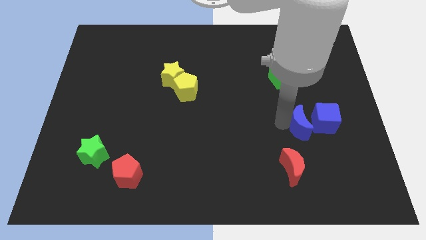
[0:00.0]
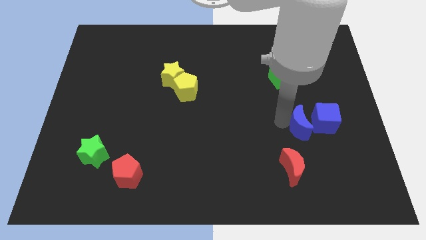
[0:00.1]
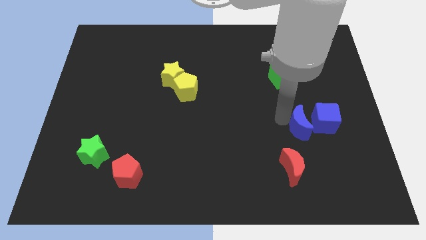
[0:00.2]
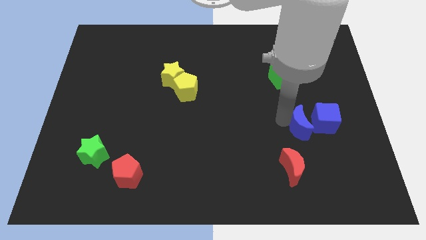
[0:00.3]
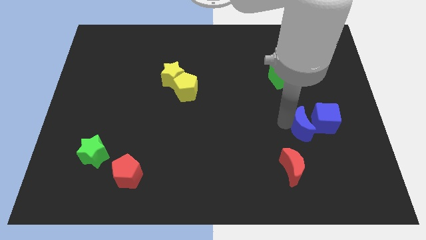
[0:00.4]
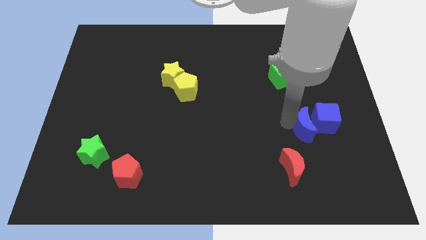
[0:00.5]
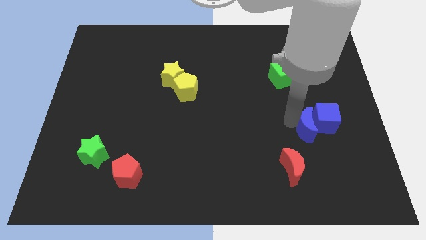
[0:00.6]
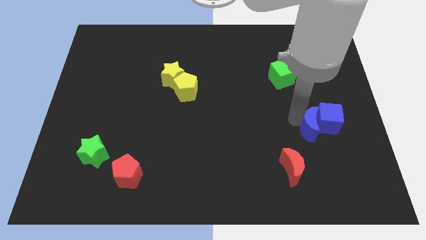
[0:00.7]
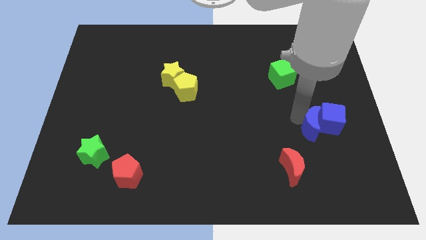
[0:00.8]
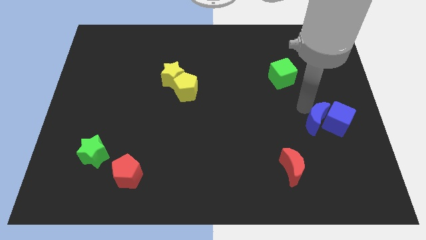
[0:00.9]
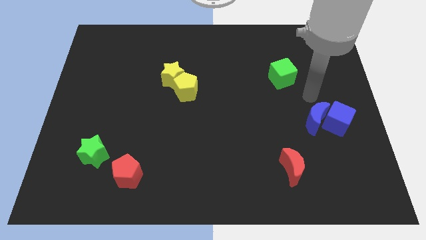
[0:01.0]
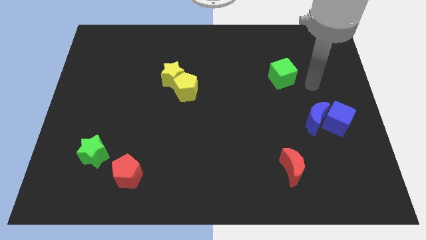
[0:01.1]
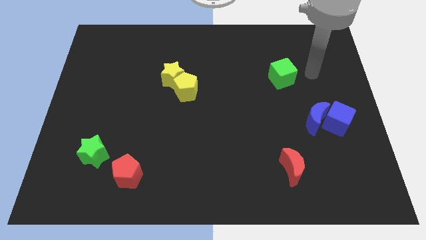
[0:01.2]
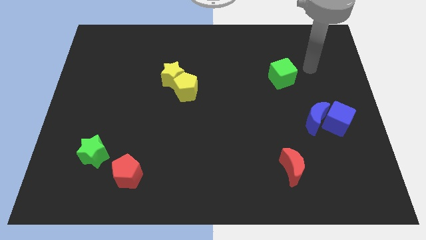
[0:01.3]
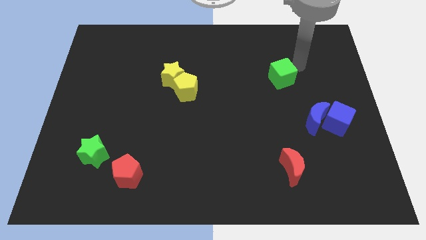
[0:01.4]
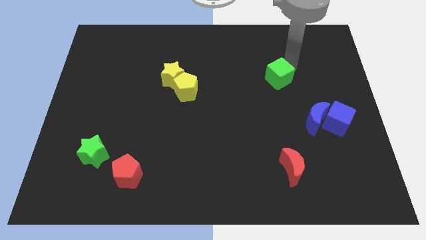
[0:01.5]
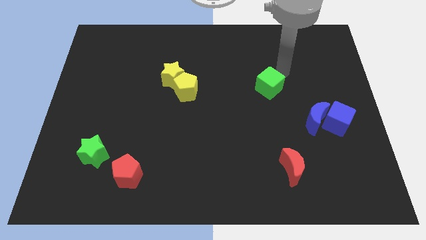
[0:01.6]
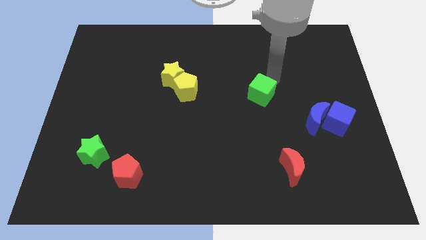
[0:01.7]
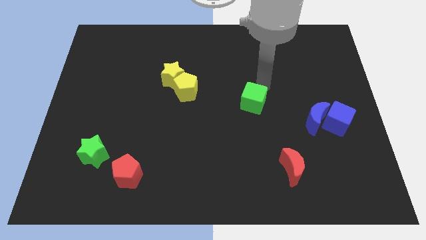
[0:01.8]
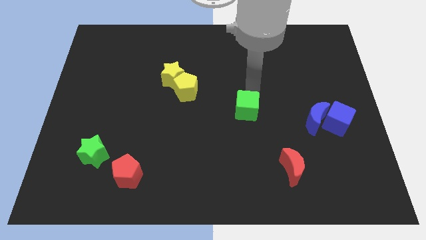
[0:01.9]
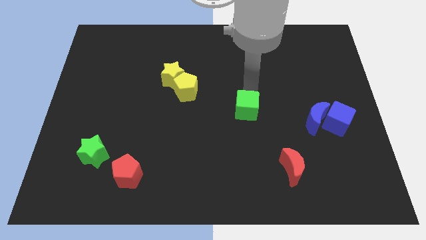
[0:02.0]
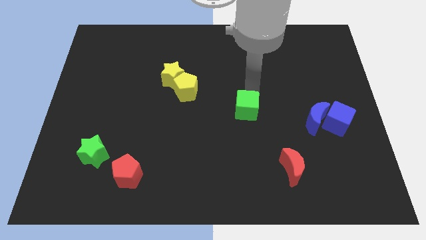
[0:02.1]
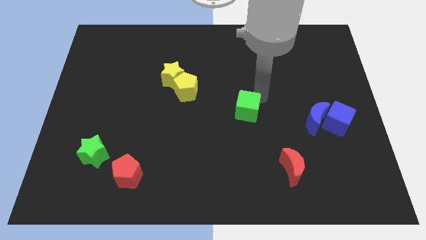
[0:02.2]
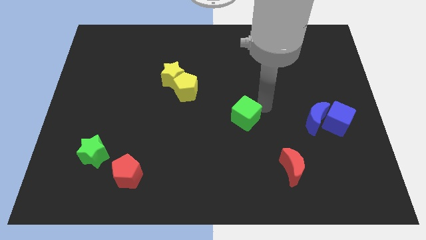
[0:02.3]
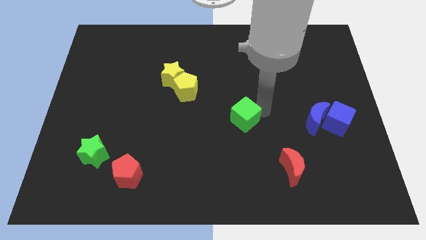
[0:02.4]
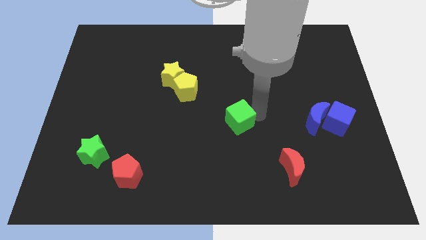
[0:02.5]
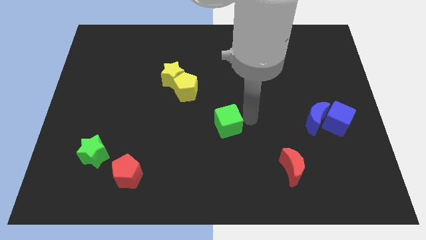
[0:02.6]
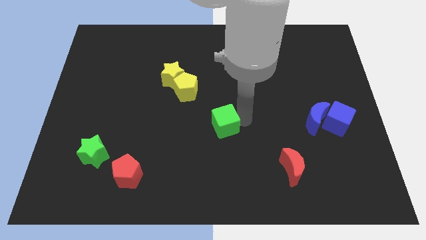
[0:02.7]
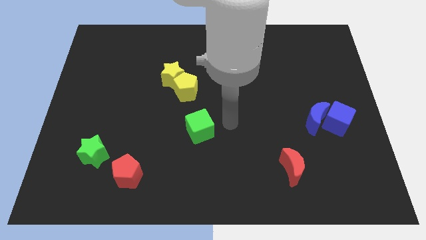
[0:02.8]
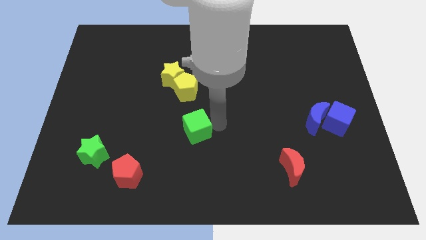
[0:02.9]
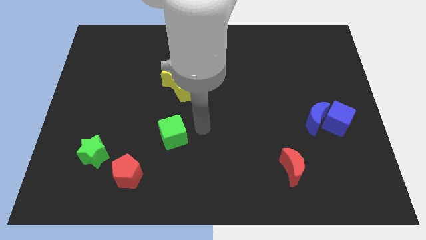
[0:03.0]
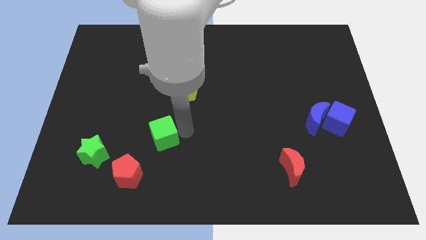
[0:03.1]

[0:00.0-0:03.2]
move the green cube to the top right side of the red pentagon

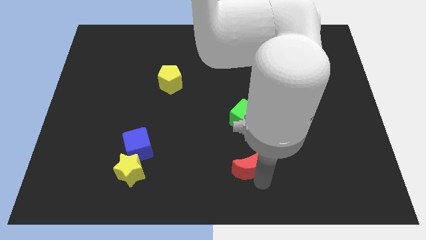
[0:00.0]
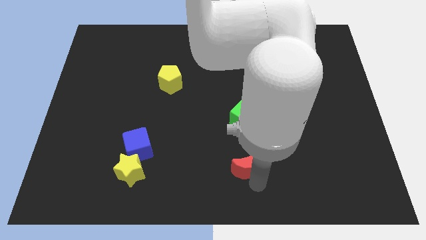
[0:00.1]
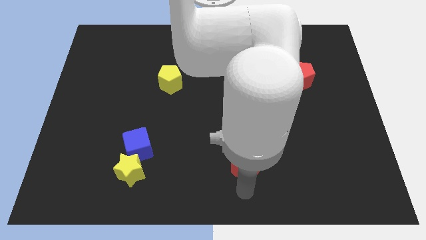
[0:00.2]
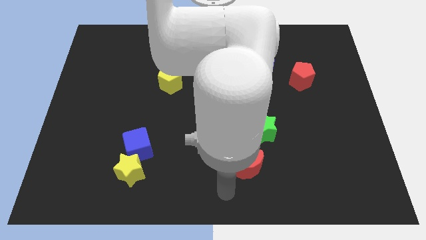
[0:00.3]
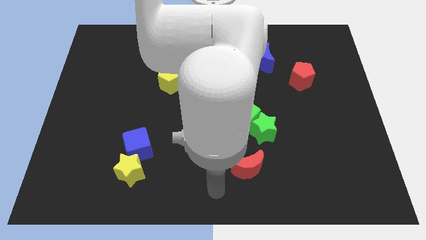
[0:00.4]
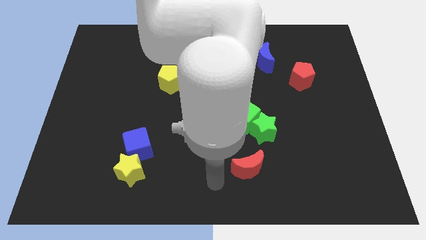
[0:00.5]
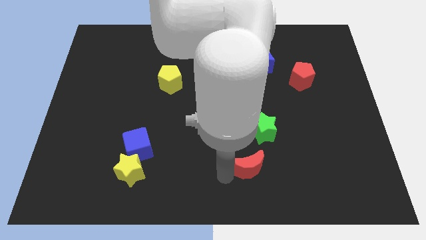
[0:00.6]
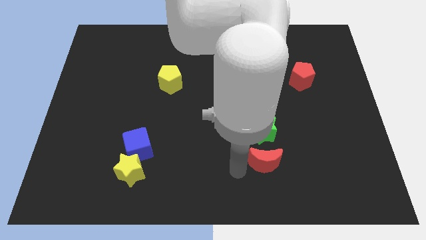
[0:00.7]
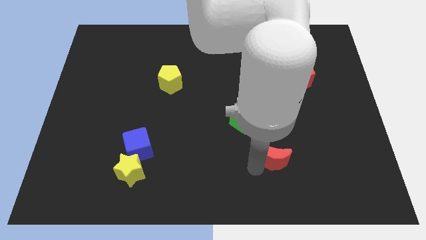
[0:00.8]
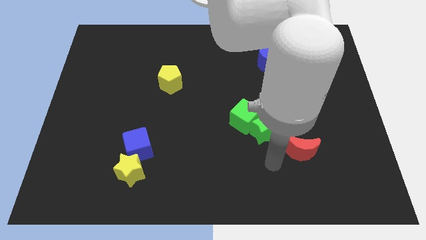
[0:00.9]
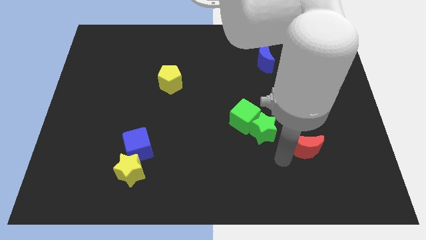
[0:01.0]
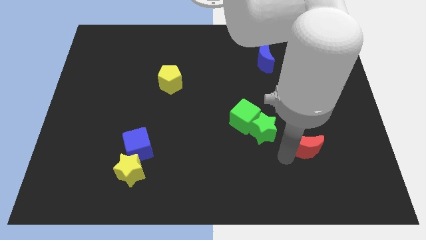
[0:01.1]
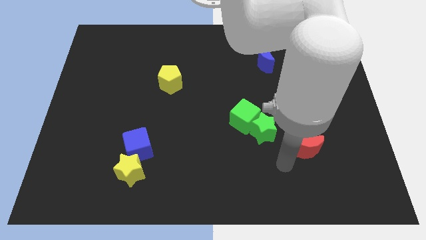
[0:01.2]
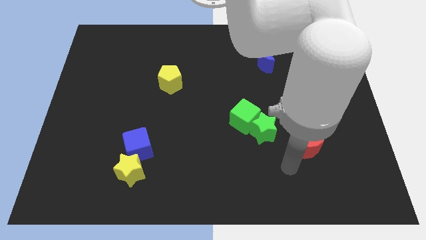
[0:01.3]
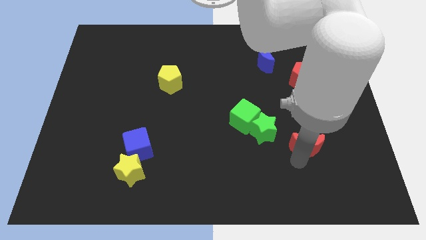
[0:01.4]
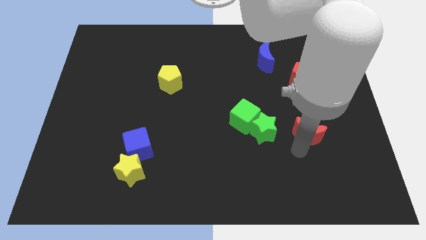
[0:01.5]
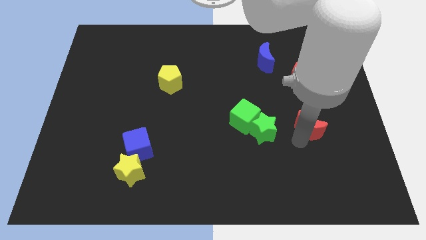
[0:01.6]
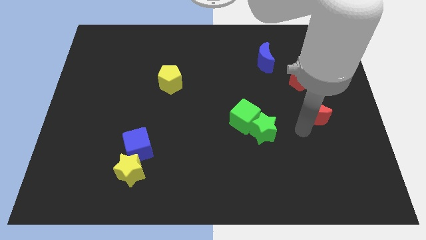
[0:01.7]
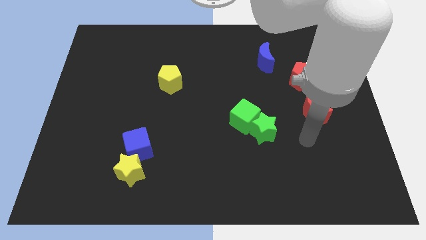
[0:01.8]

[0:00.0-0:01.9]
place the red crescent towards bottom of the red pentagon

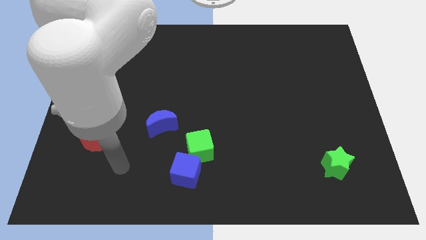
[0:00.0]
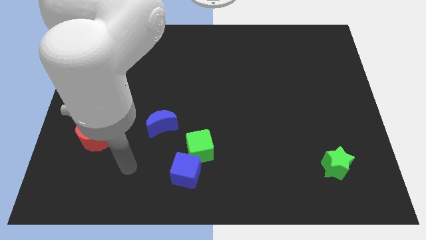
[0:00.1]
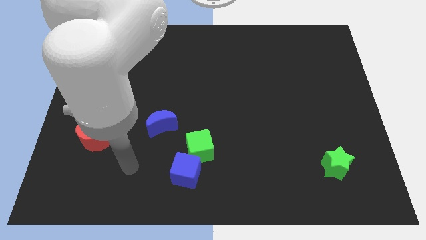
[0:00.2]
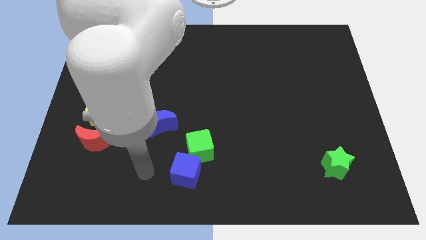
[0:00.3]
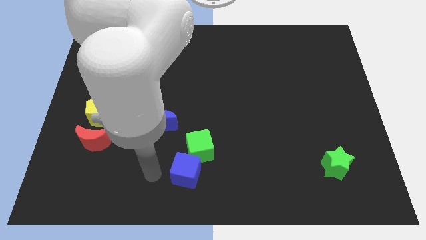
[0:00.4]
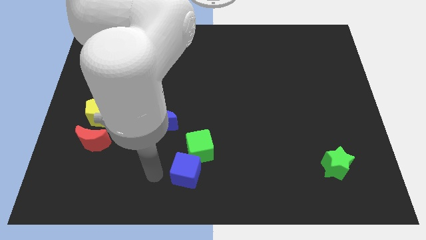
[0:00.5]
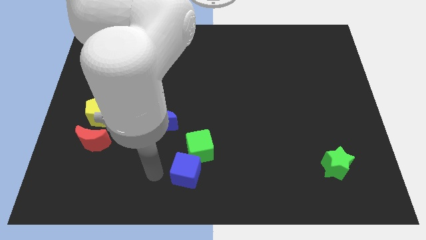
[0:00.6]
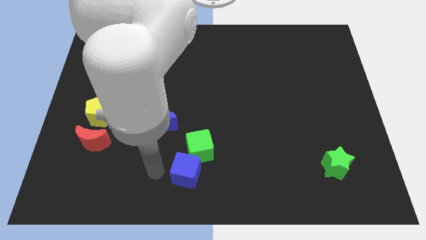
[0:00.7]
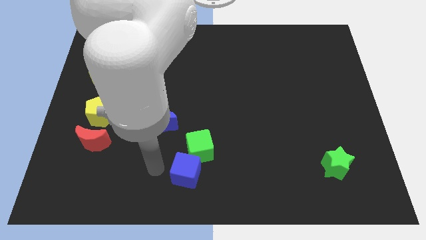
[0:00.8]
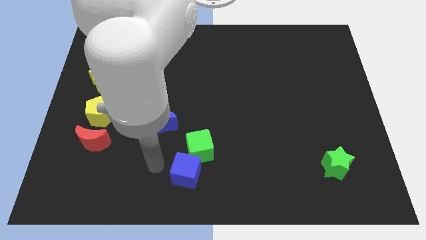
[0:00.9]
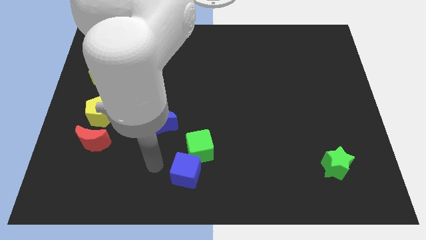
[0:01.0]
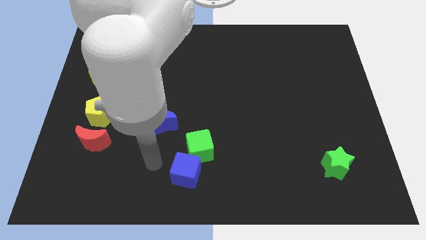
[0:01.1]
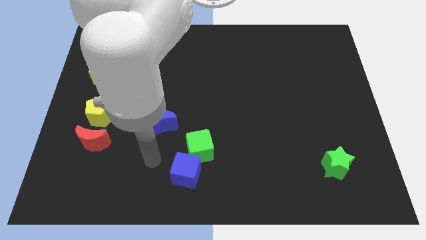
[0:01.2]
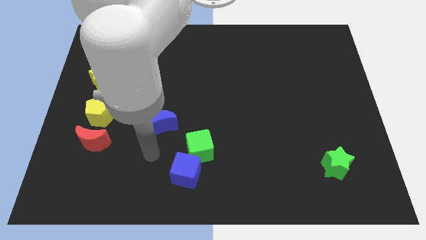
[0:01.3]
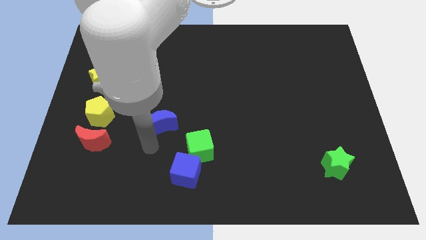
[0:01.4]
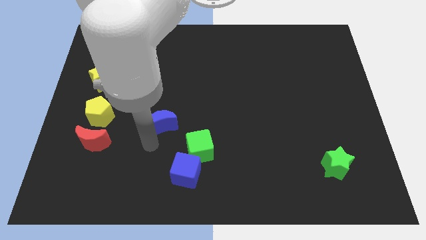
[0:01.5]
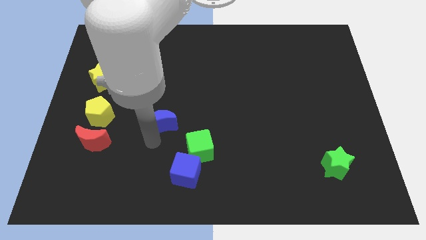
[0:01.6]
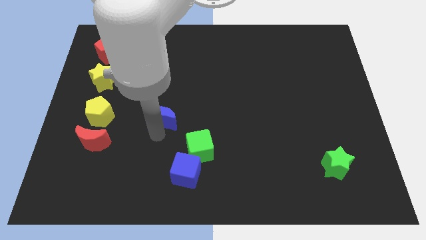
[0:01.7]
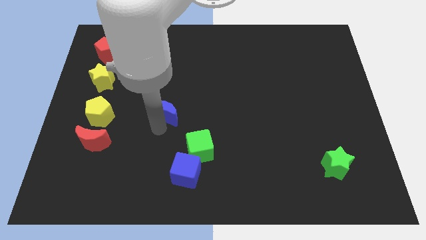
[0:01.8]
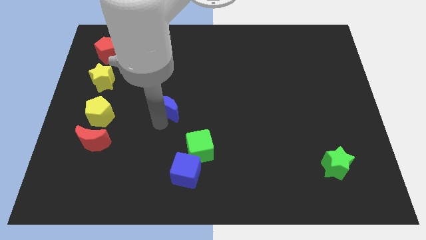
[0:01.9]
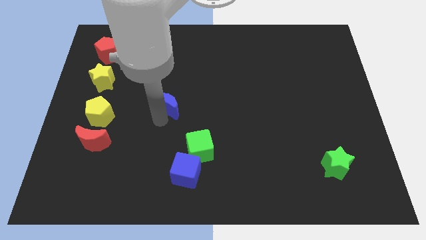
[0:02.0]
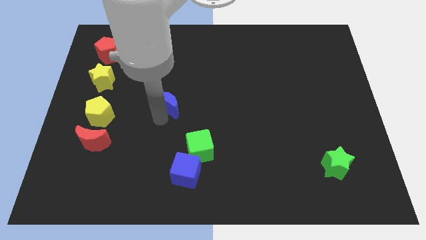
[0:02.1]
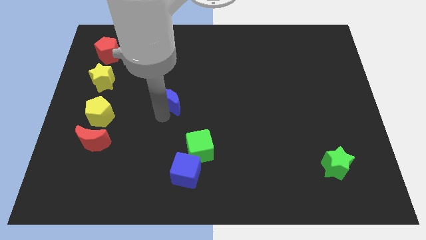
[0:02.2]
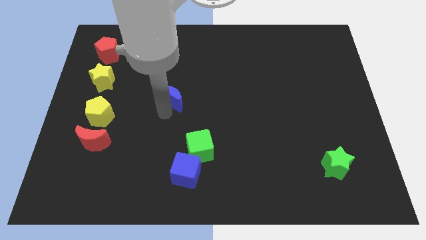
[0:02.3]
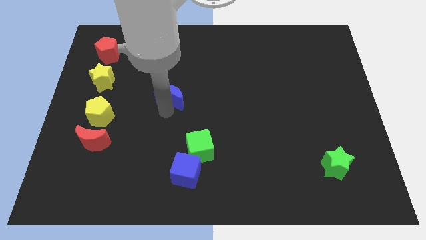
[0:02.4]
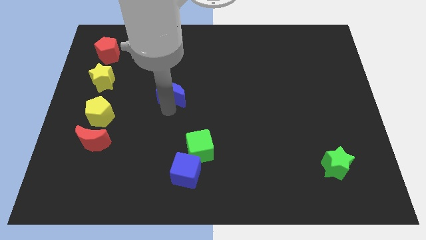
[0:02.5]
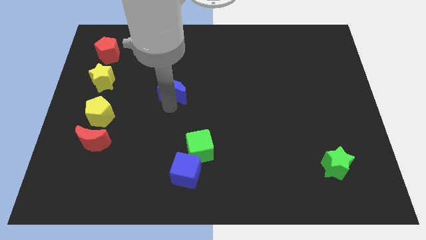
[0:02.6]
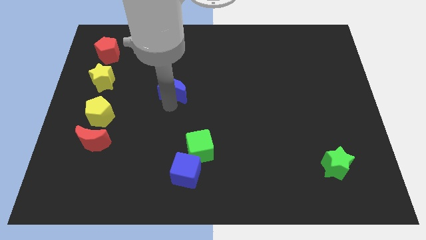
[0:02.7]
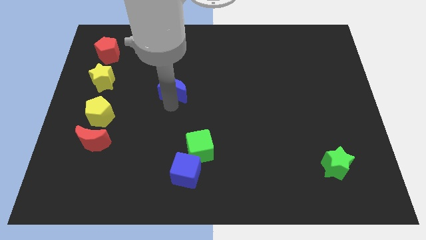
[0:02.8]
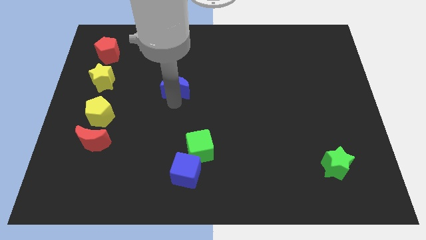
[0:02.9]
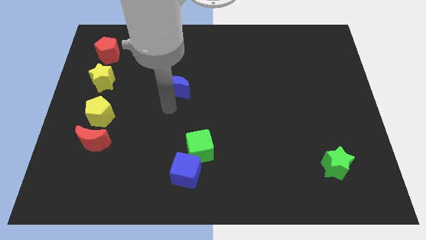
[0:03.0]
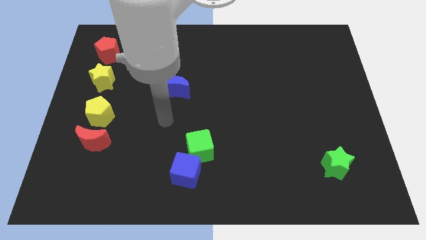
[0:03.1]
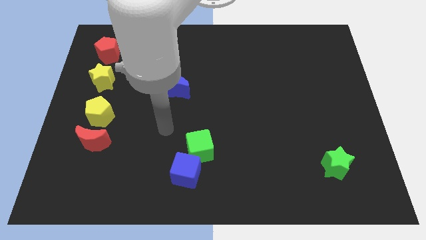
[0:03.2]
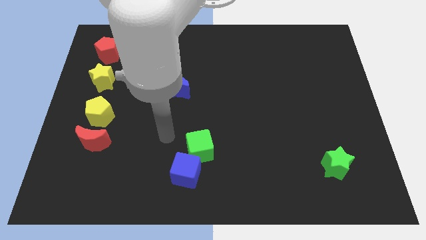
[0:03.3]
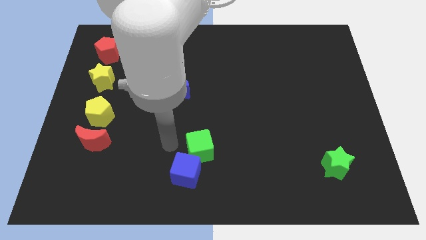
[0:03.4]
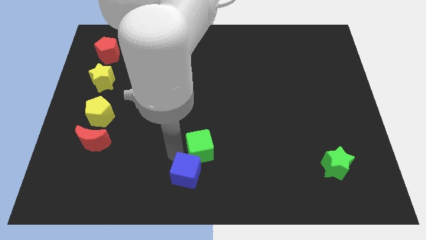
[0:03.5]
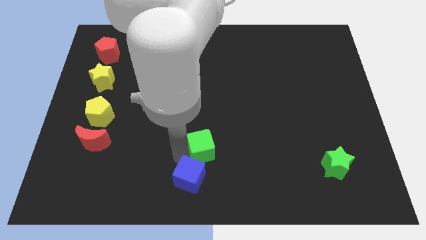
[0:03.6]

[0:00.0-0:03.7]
push blue crescent towards the top center
